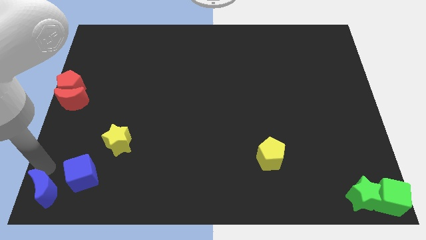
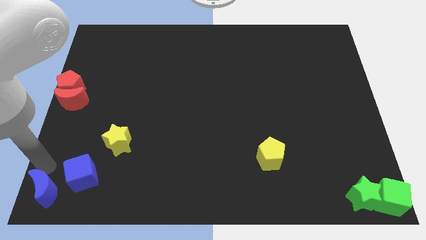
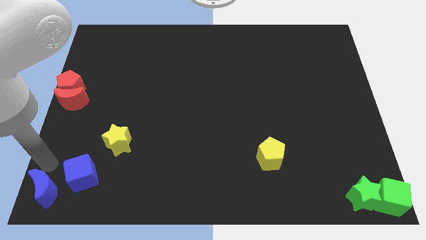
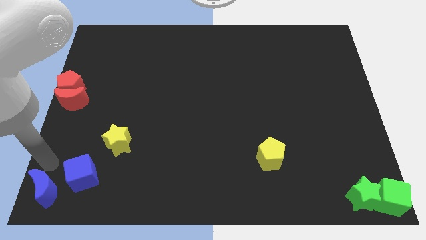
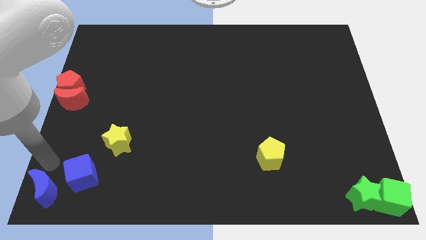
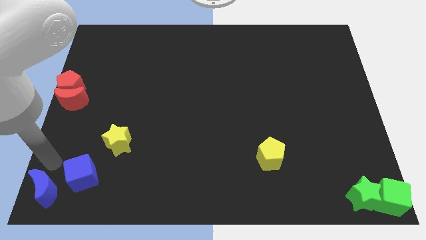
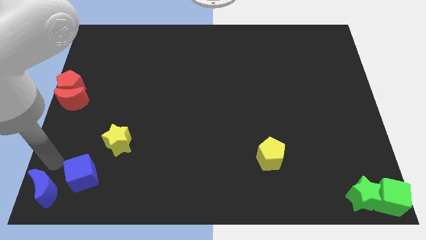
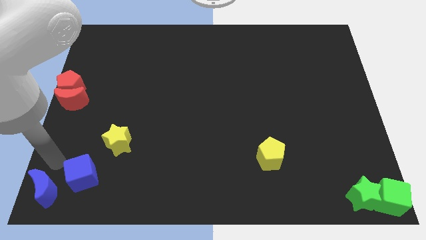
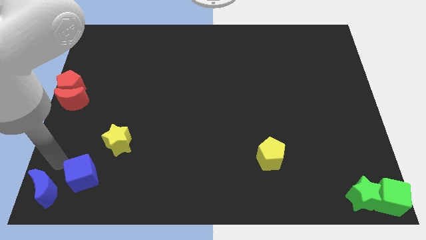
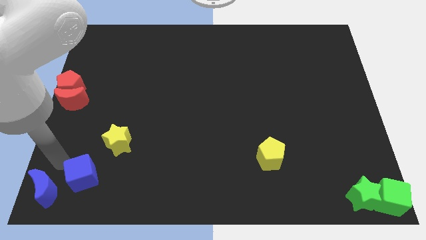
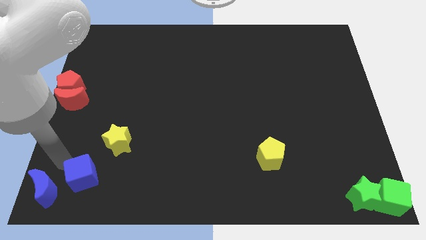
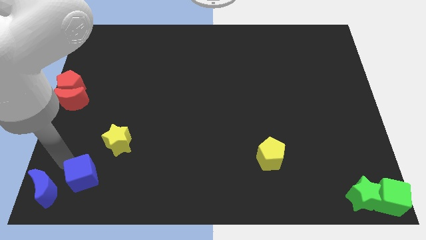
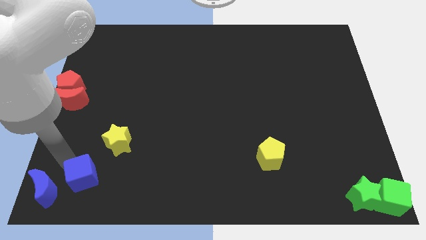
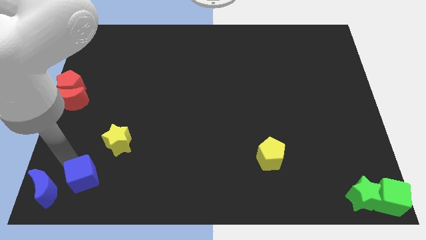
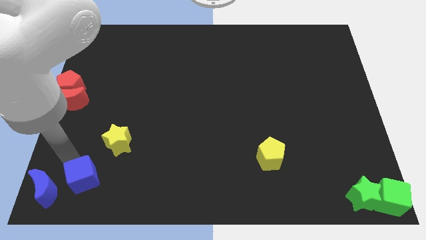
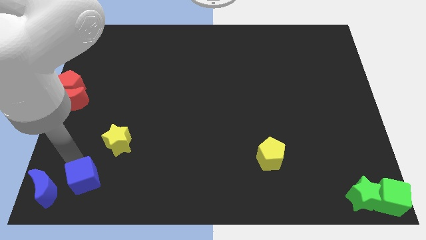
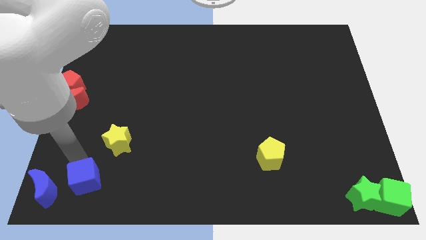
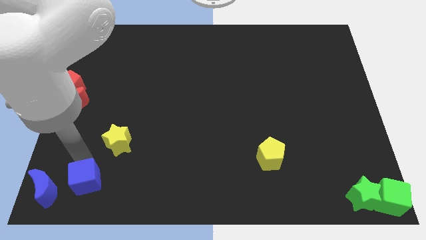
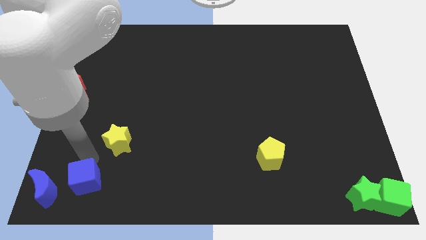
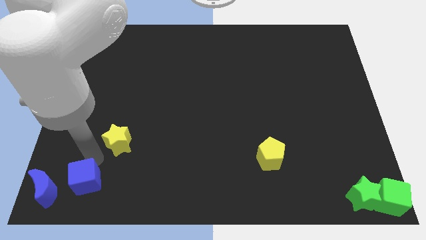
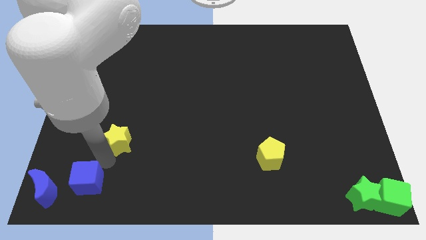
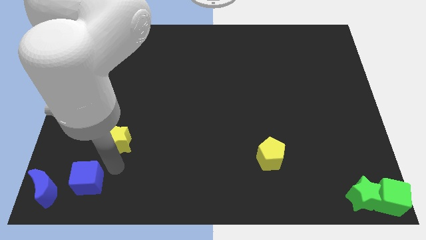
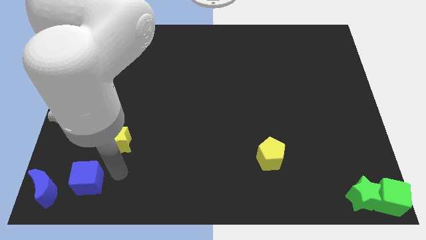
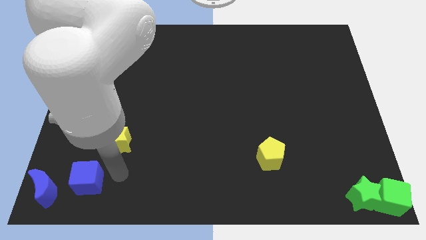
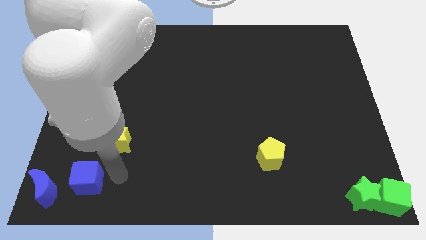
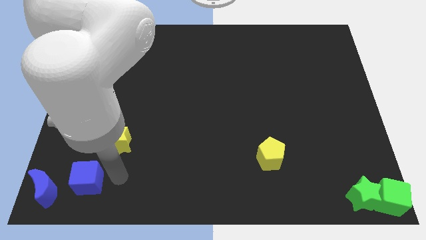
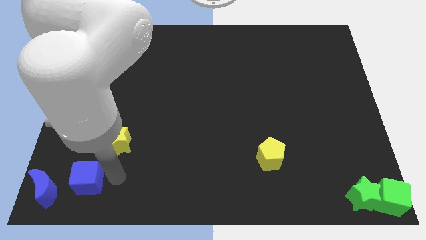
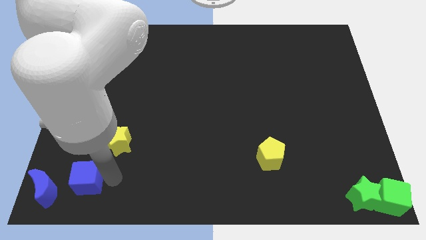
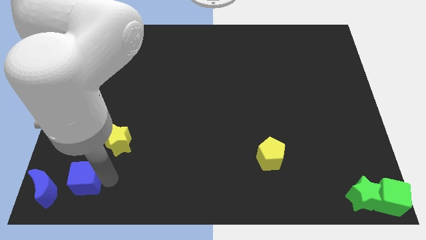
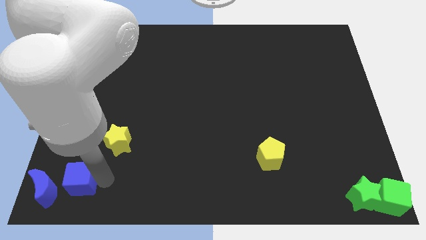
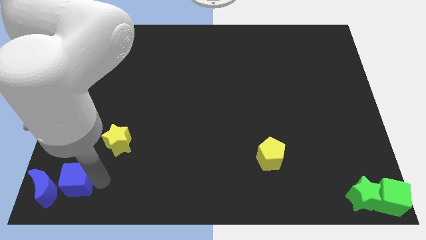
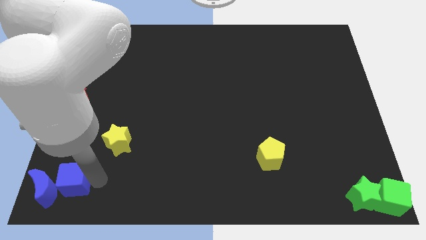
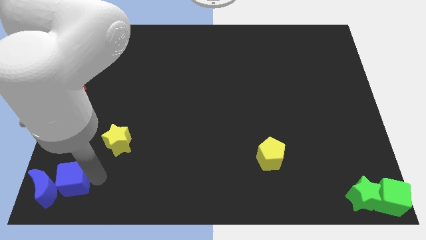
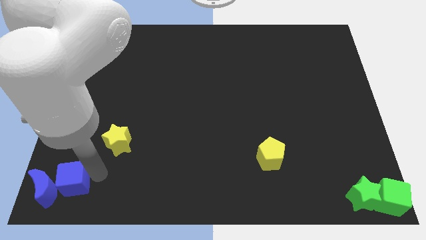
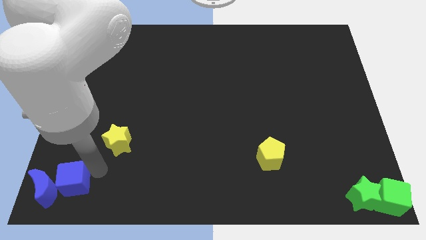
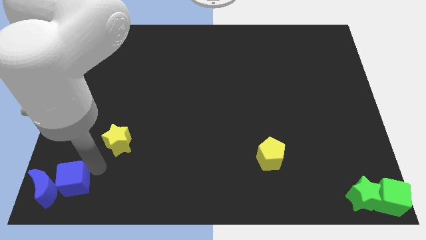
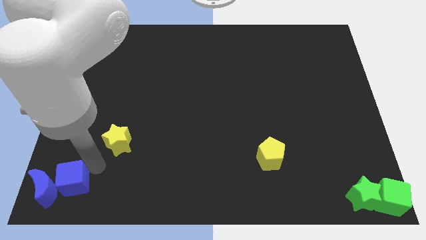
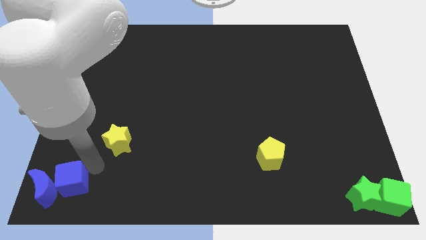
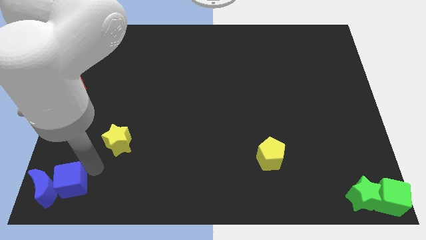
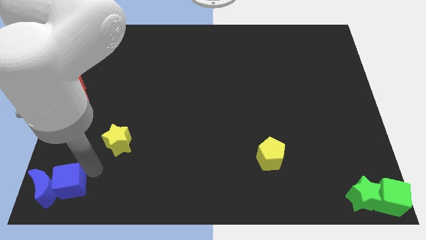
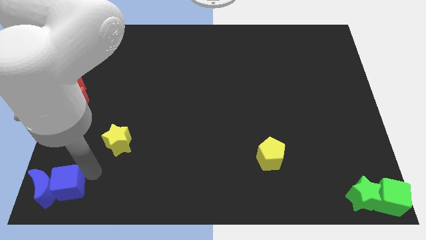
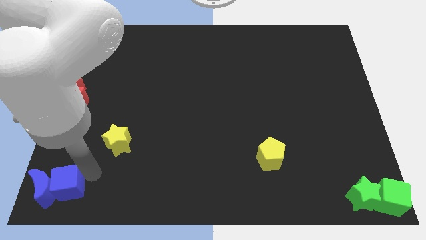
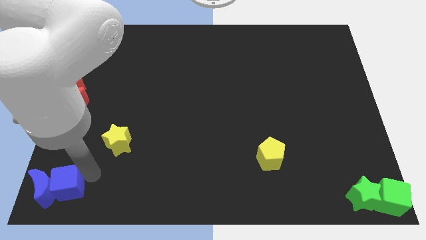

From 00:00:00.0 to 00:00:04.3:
push the blue cube into the right of the blue crescent

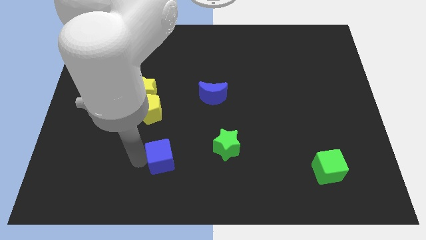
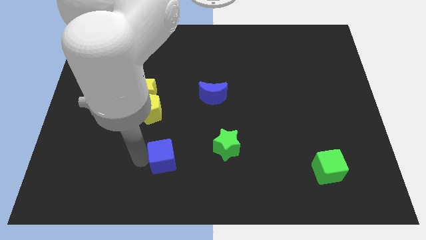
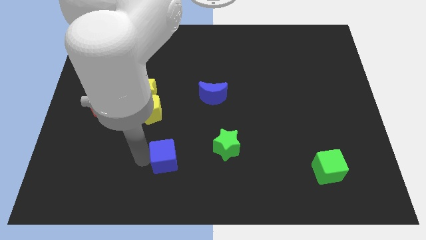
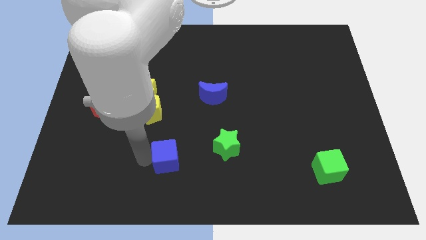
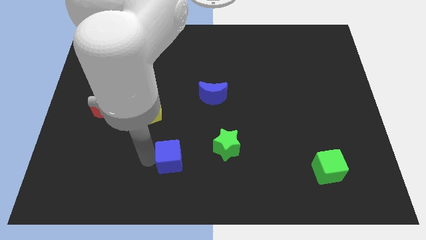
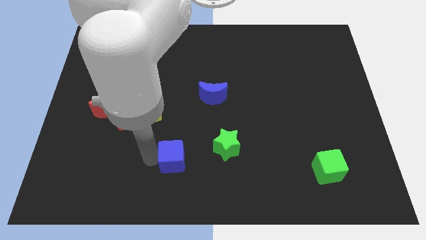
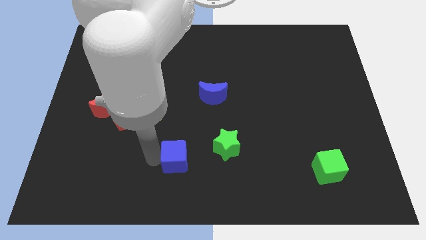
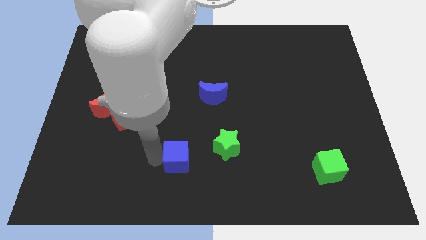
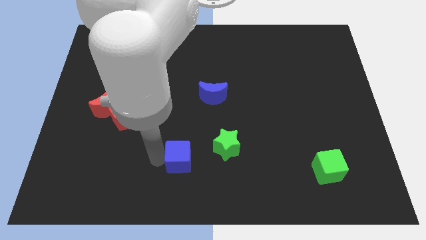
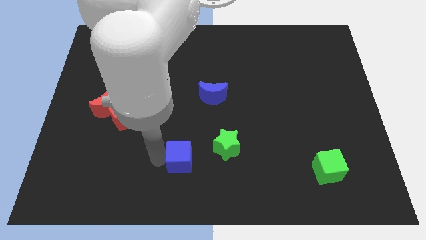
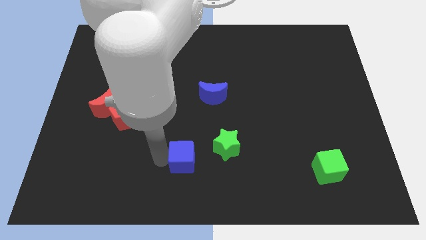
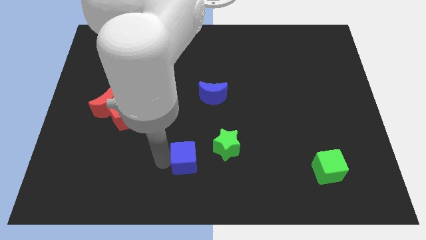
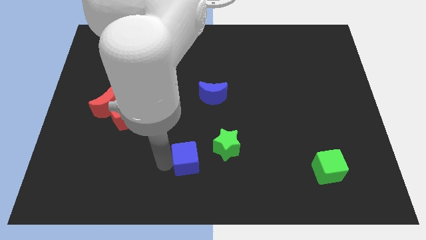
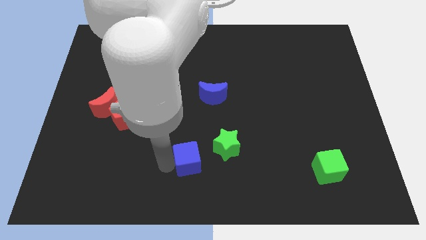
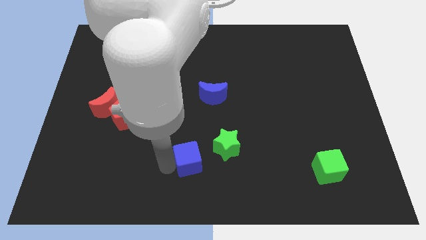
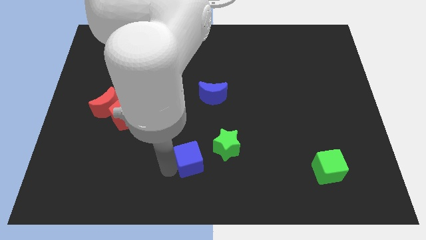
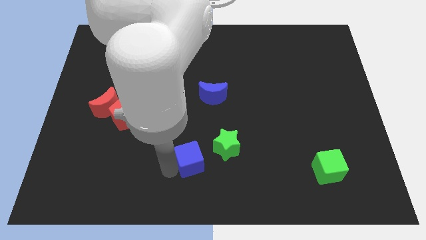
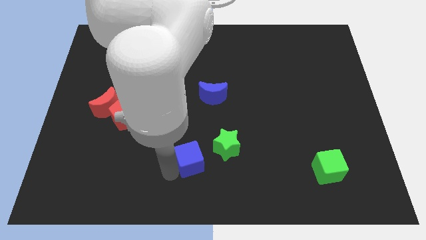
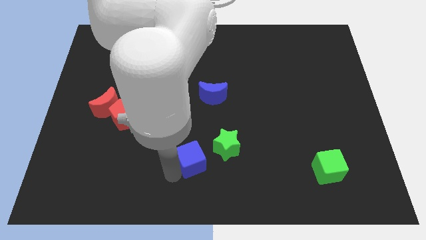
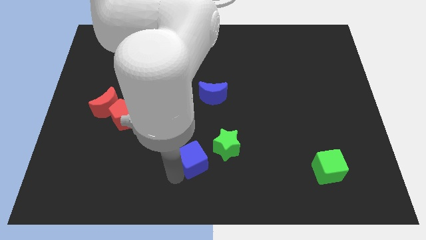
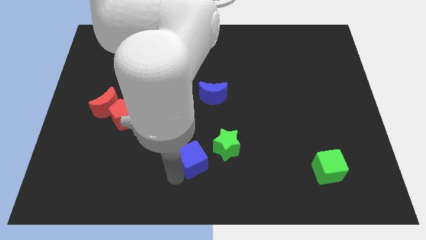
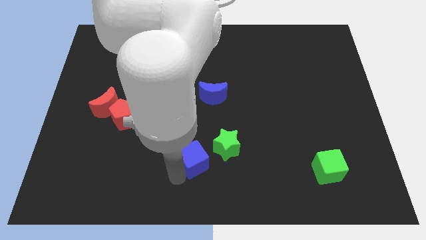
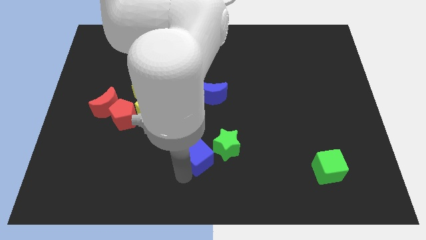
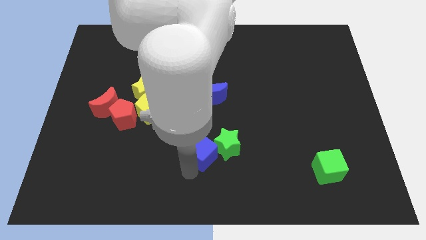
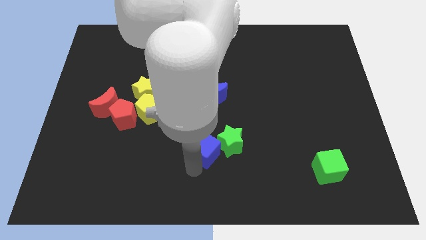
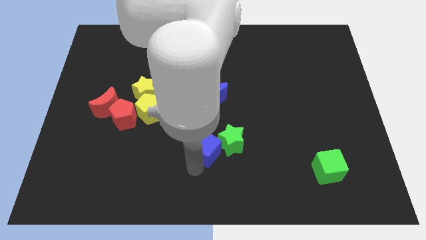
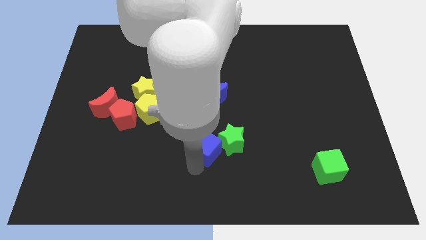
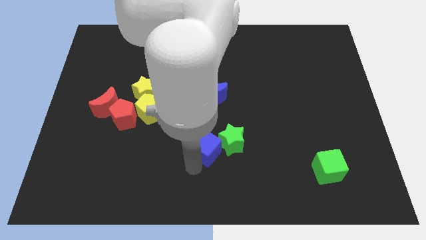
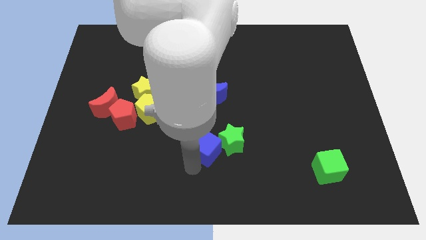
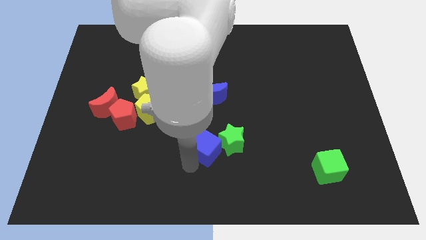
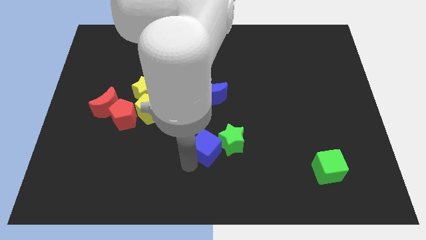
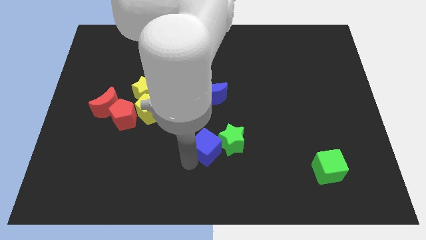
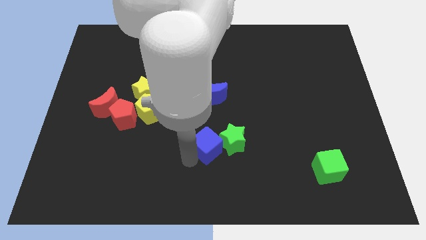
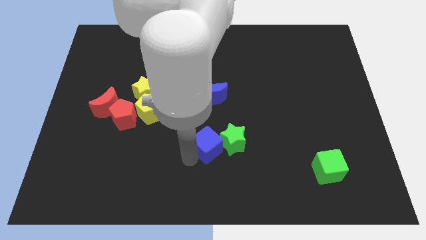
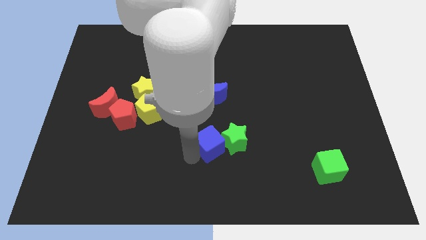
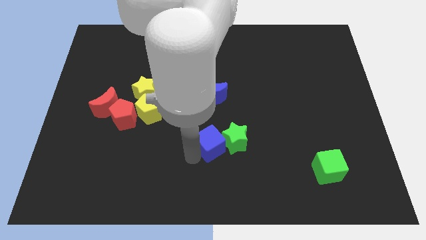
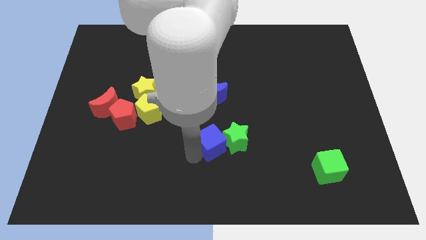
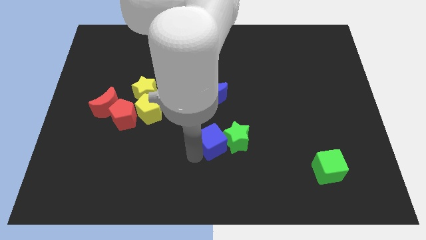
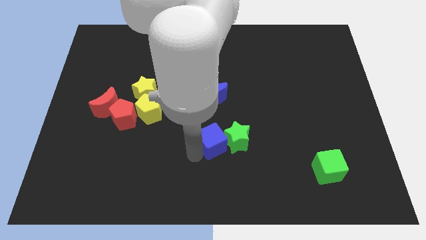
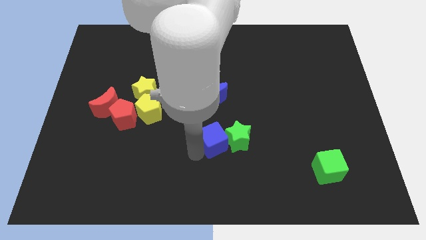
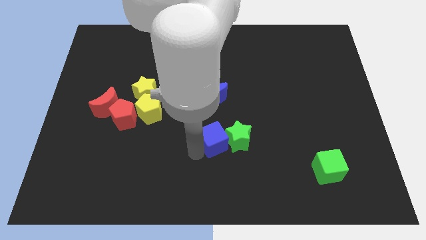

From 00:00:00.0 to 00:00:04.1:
push the blue cube to the left of the green star

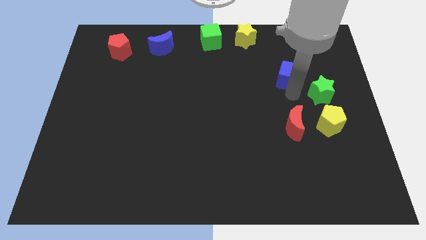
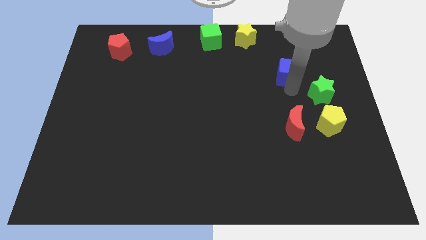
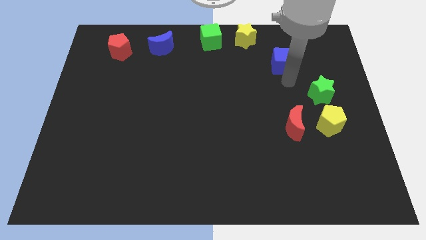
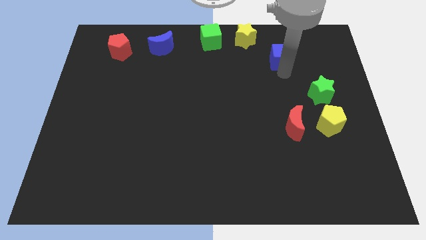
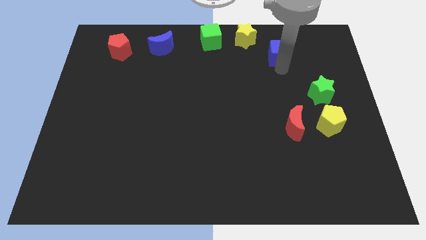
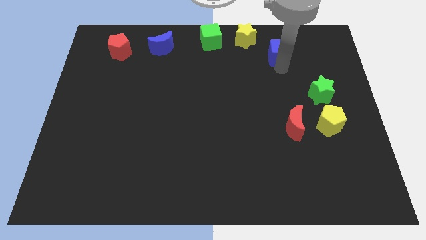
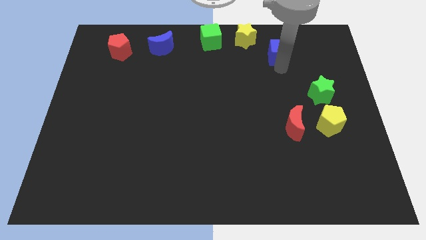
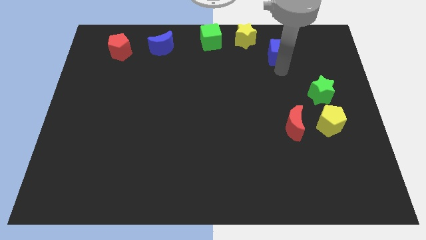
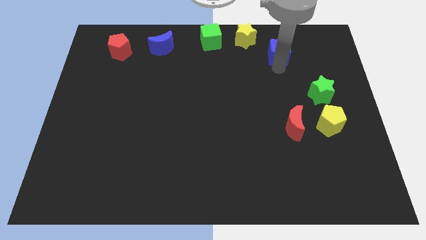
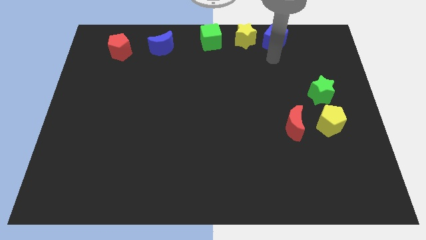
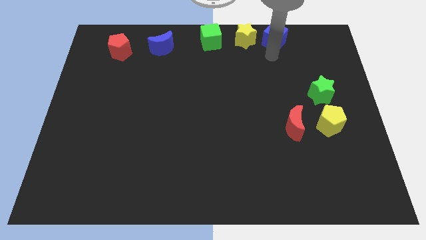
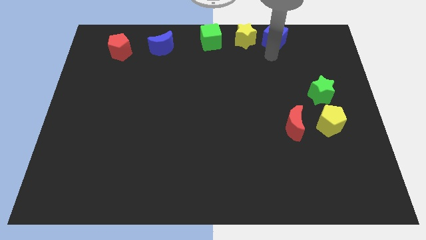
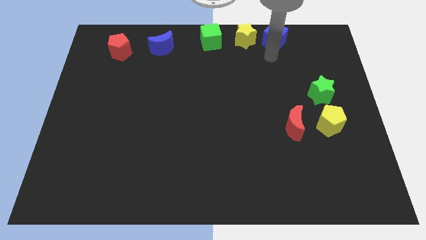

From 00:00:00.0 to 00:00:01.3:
push the blue cube to the right side of the yellow star
